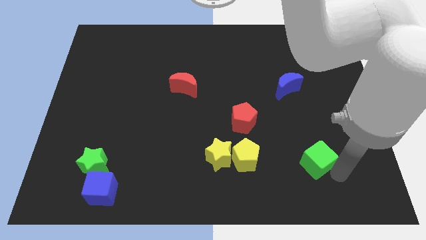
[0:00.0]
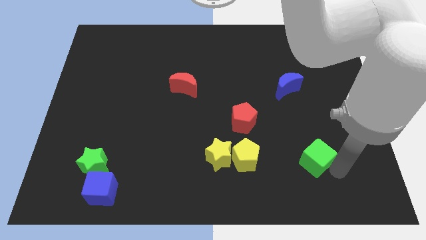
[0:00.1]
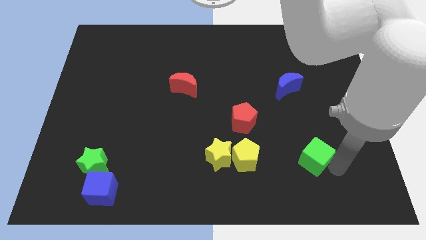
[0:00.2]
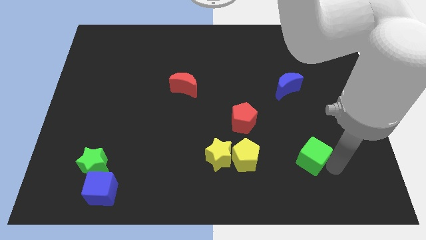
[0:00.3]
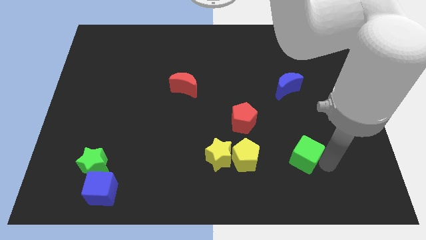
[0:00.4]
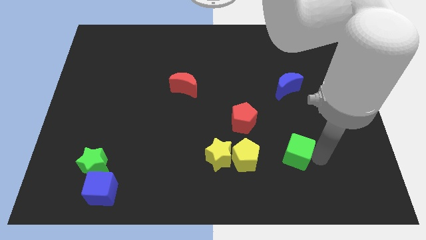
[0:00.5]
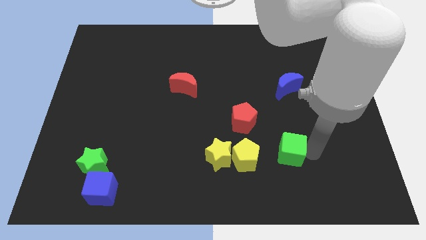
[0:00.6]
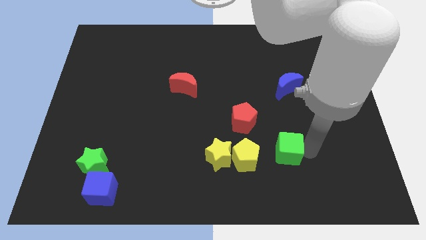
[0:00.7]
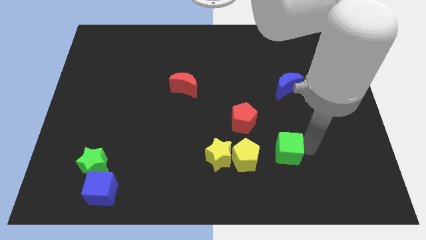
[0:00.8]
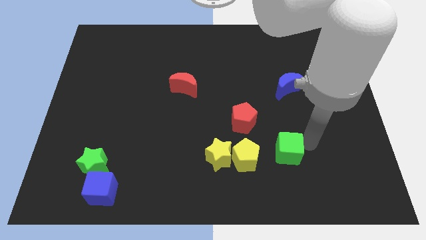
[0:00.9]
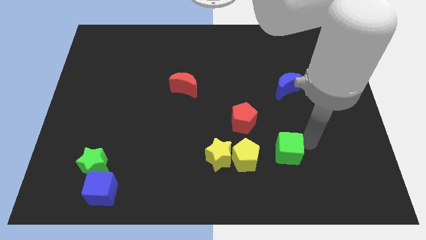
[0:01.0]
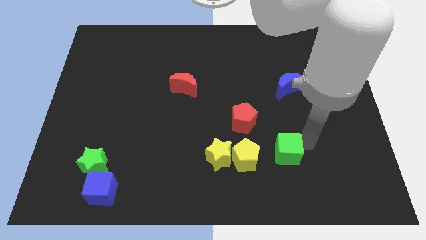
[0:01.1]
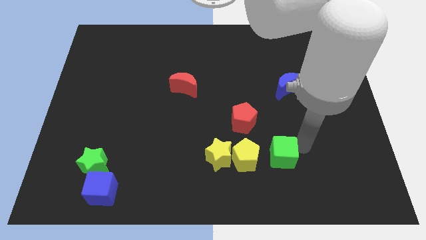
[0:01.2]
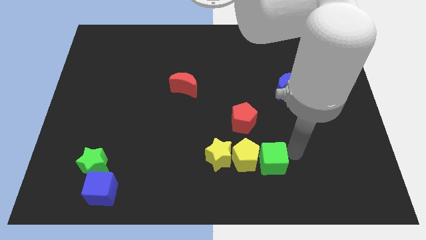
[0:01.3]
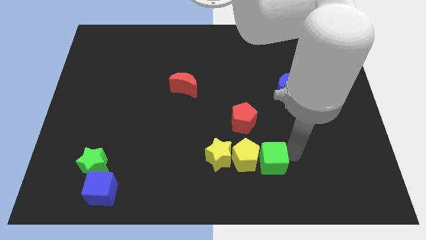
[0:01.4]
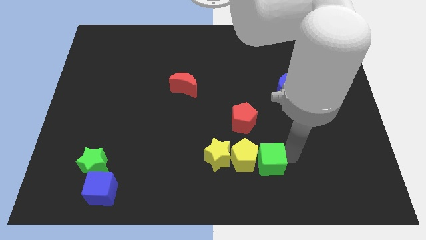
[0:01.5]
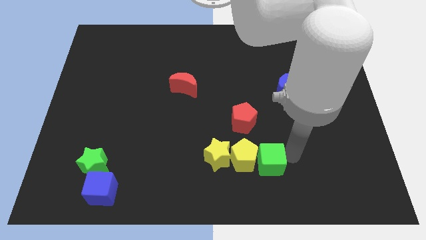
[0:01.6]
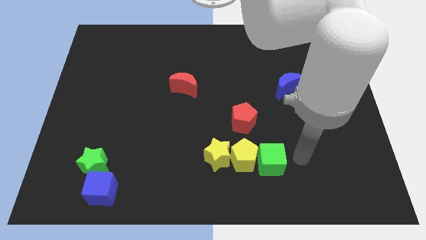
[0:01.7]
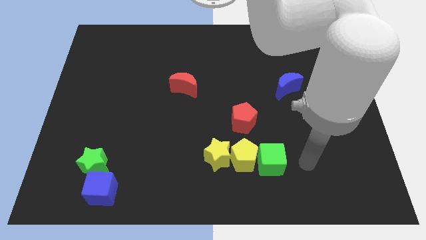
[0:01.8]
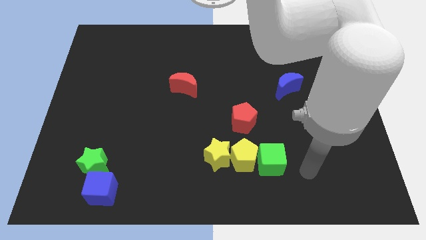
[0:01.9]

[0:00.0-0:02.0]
move the green cube close to the yellow pentagon

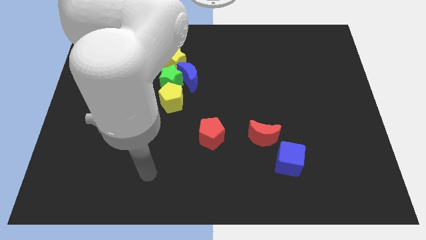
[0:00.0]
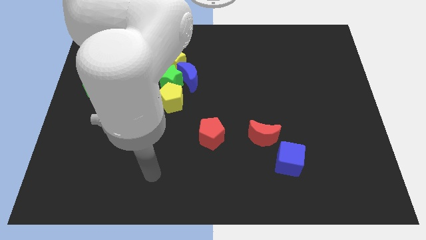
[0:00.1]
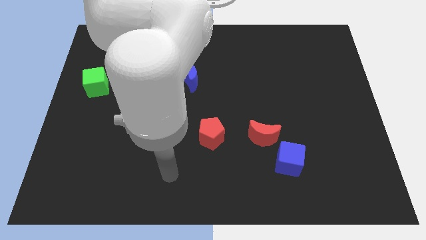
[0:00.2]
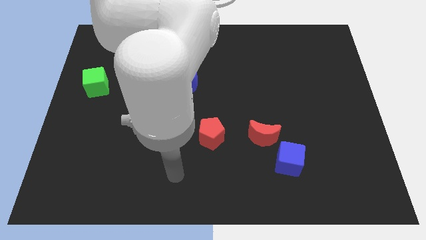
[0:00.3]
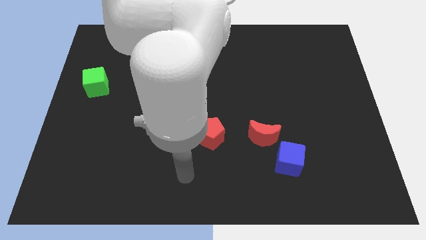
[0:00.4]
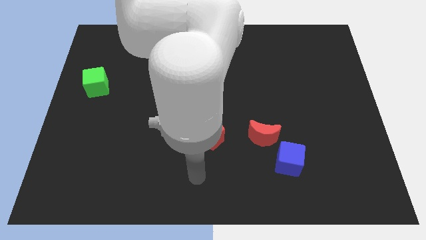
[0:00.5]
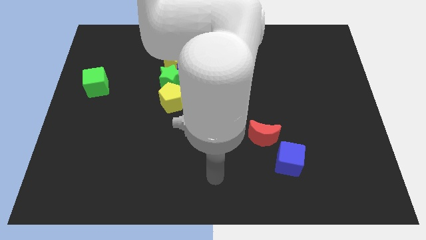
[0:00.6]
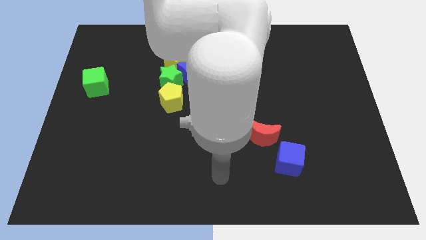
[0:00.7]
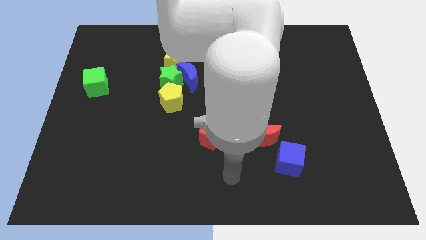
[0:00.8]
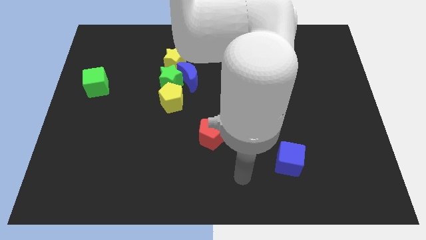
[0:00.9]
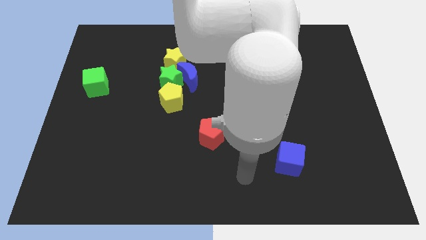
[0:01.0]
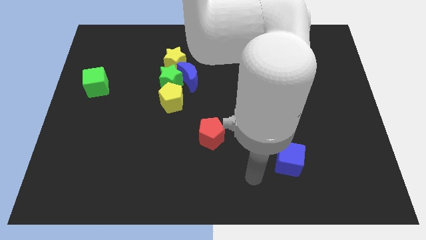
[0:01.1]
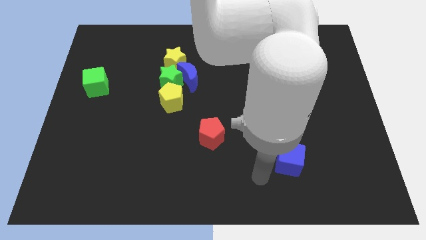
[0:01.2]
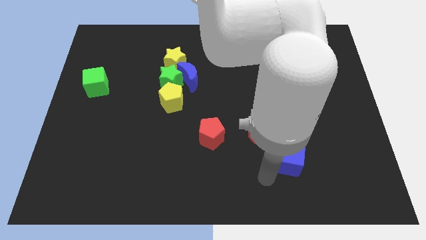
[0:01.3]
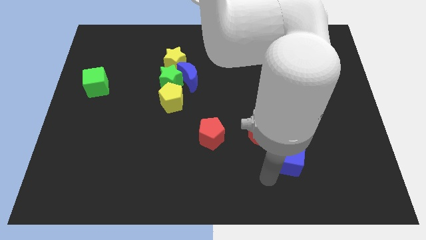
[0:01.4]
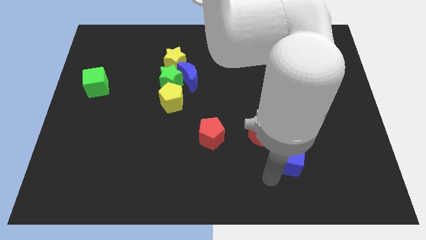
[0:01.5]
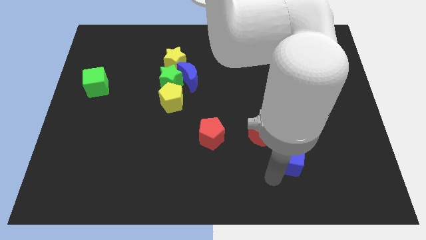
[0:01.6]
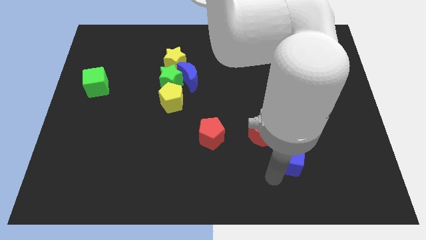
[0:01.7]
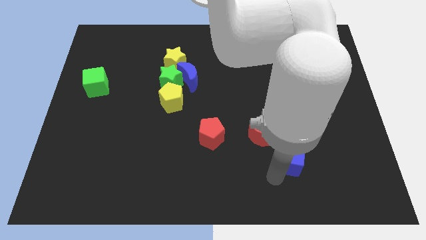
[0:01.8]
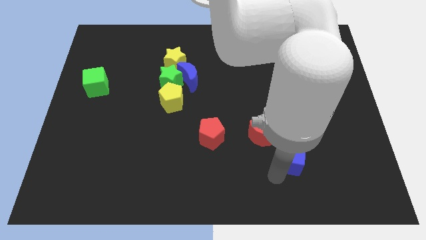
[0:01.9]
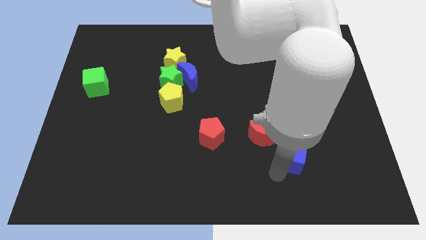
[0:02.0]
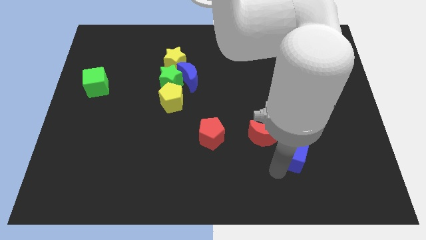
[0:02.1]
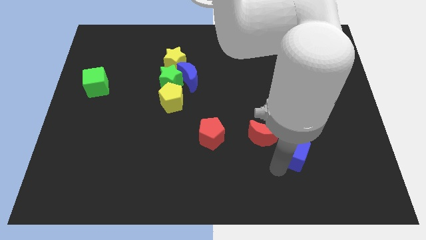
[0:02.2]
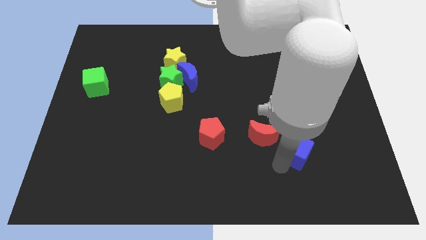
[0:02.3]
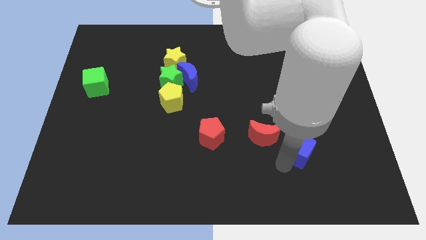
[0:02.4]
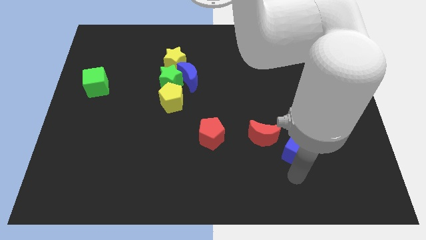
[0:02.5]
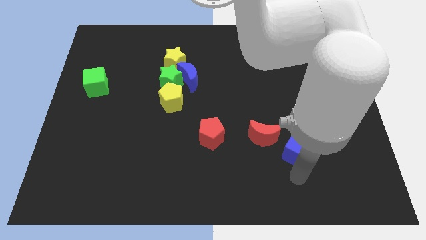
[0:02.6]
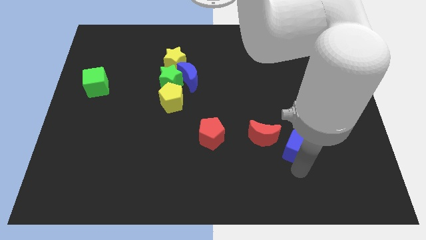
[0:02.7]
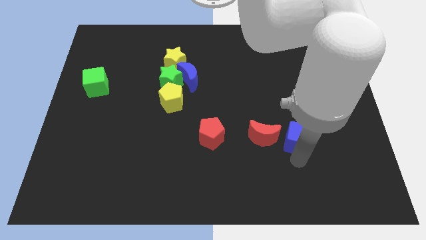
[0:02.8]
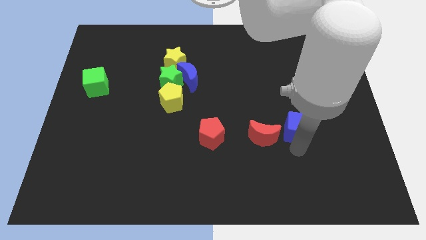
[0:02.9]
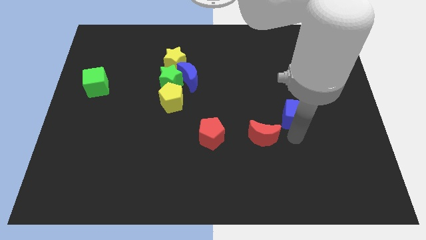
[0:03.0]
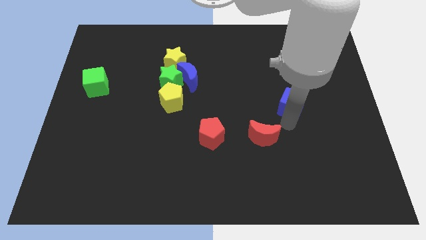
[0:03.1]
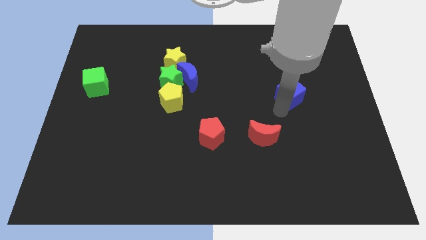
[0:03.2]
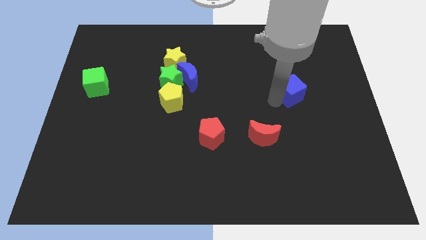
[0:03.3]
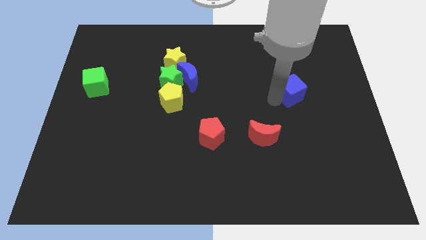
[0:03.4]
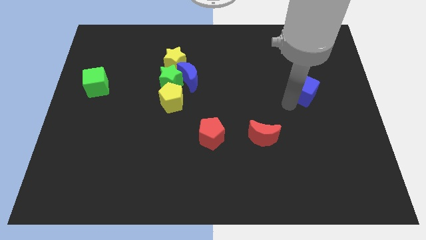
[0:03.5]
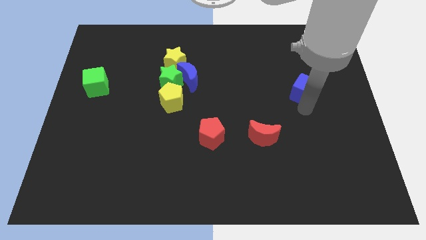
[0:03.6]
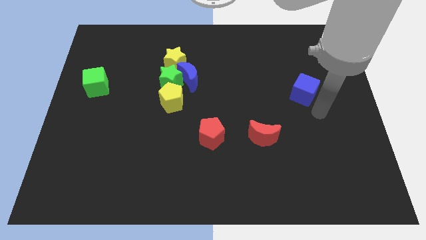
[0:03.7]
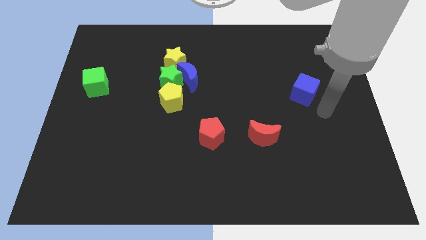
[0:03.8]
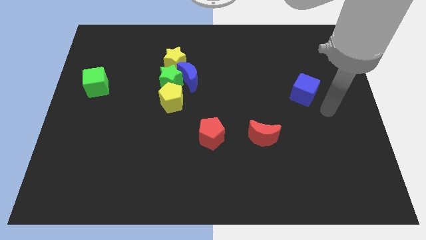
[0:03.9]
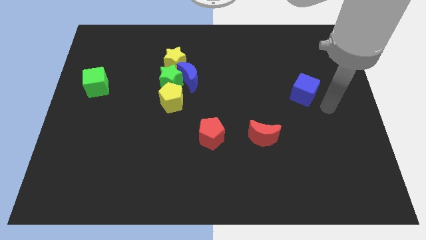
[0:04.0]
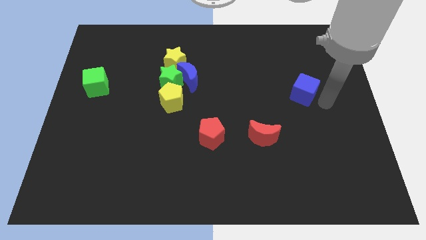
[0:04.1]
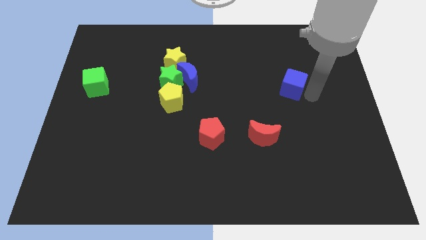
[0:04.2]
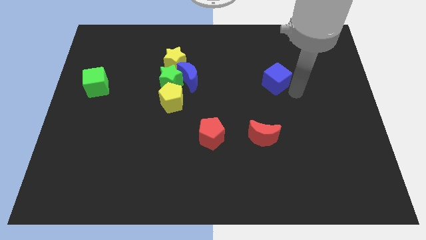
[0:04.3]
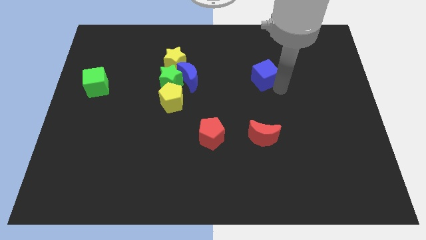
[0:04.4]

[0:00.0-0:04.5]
place the blue cube parallel to blue moon

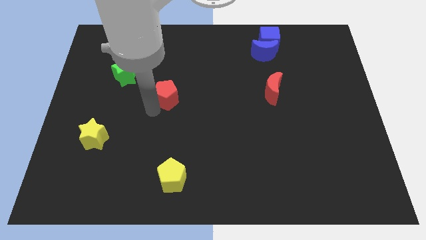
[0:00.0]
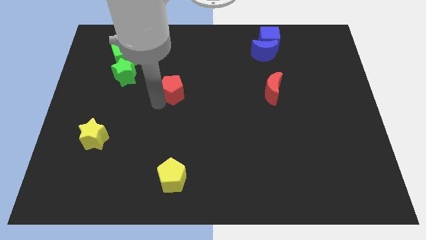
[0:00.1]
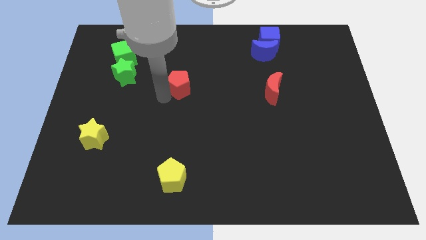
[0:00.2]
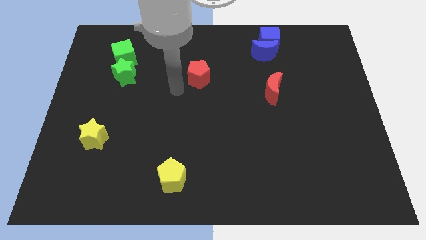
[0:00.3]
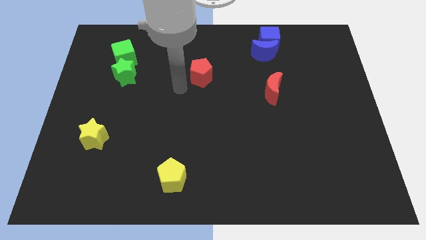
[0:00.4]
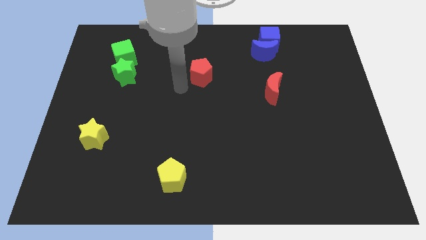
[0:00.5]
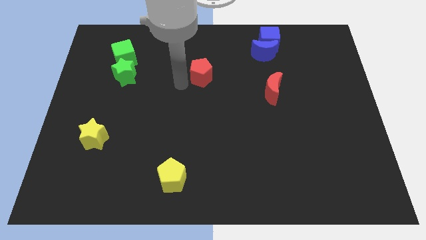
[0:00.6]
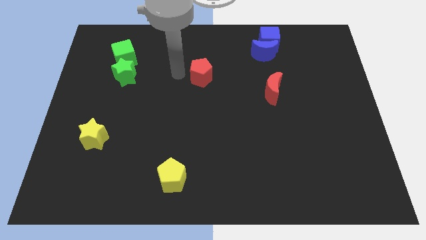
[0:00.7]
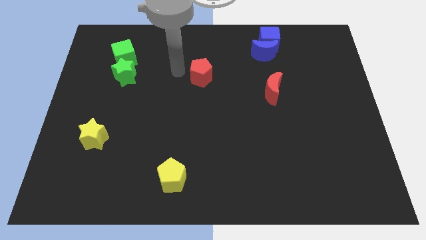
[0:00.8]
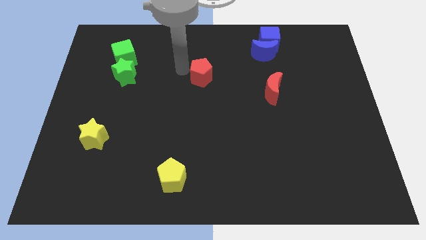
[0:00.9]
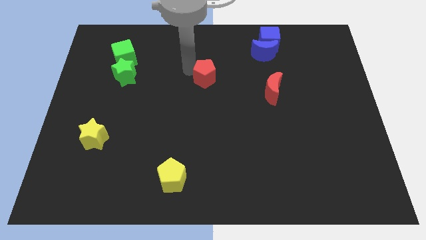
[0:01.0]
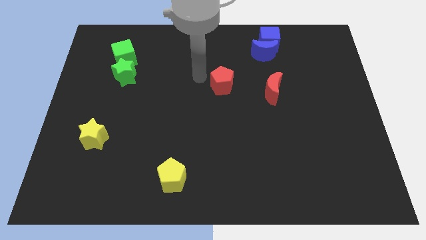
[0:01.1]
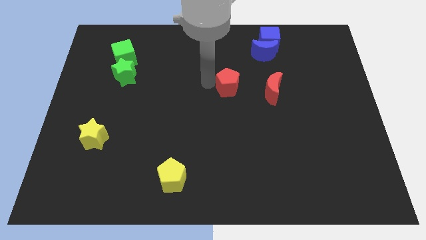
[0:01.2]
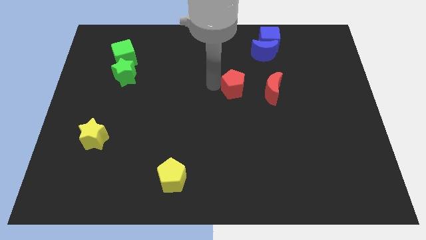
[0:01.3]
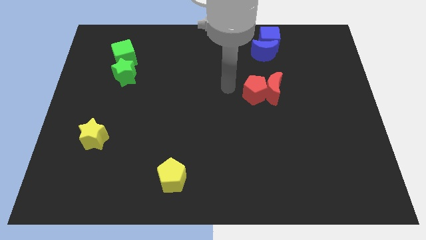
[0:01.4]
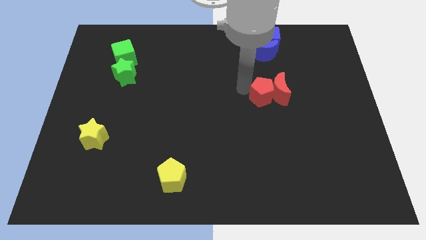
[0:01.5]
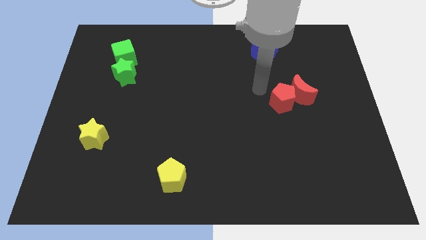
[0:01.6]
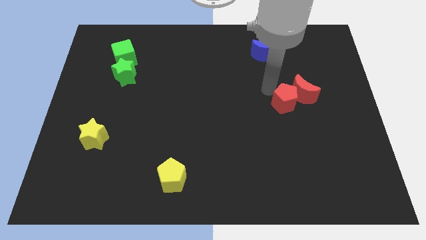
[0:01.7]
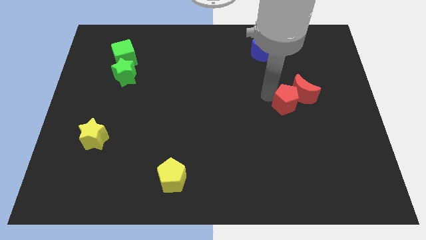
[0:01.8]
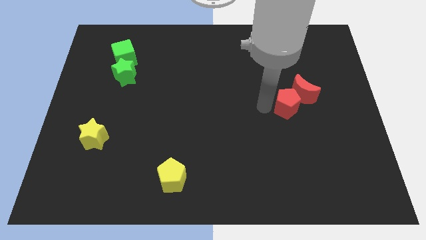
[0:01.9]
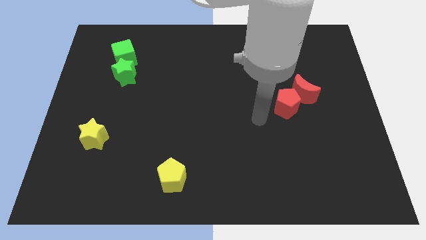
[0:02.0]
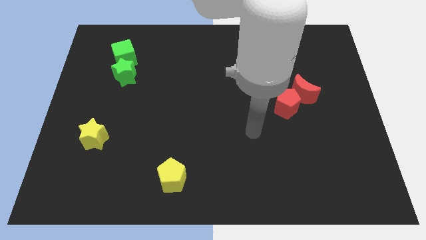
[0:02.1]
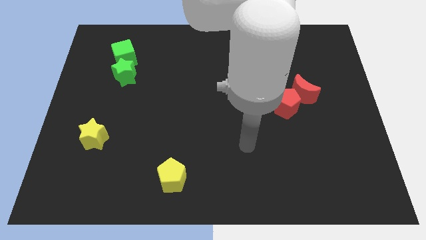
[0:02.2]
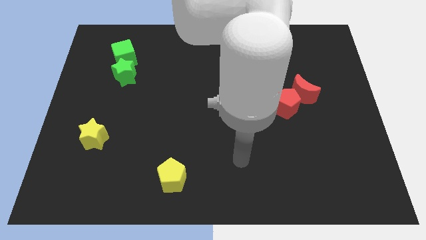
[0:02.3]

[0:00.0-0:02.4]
push the red pentagon into the red crescent

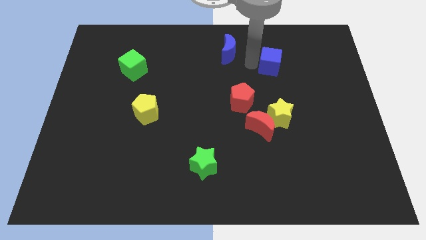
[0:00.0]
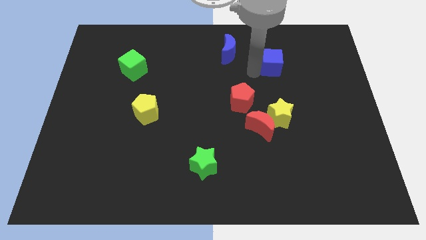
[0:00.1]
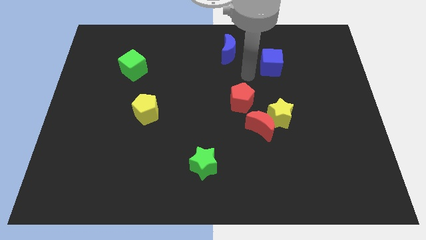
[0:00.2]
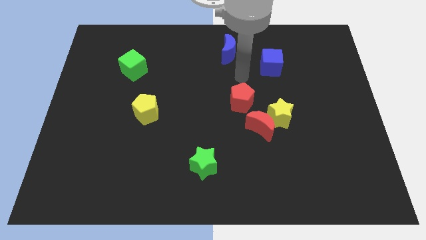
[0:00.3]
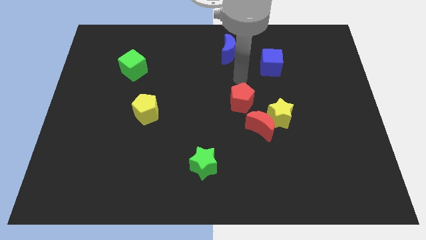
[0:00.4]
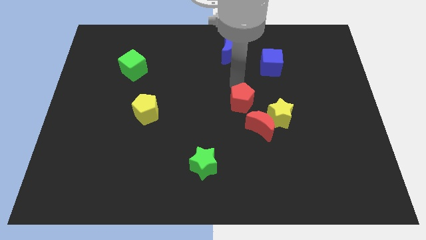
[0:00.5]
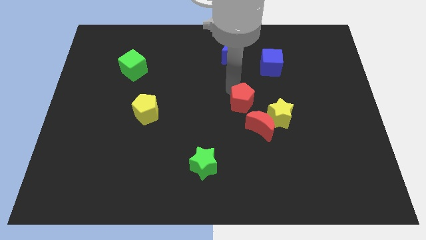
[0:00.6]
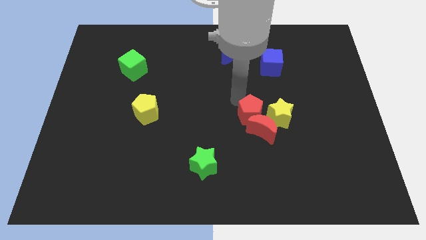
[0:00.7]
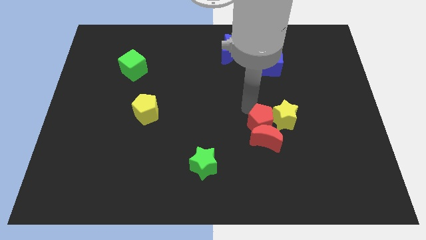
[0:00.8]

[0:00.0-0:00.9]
push the red pentagon into the red moon
